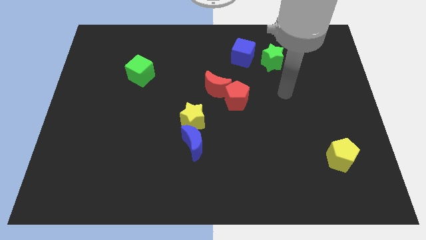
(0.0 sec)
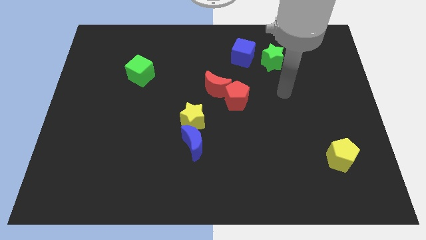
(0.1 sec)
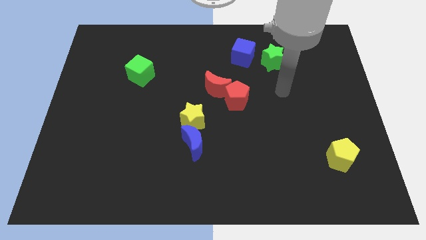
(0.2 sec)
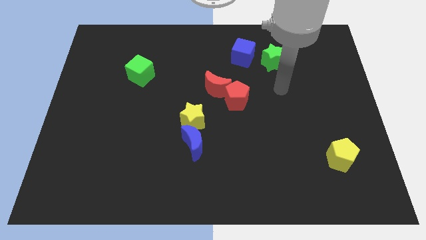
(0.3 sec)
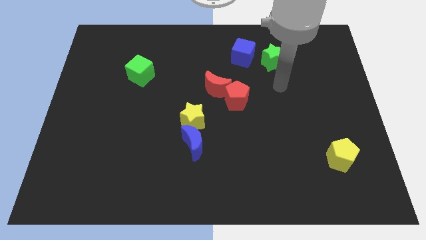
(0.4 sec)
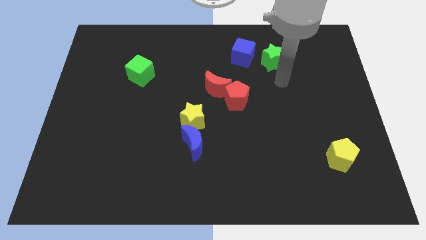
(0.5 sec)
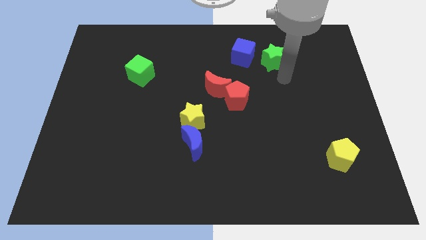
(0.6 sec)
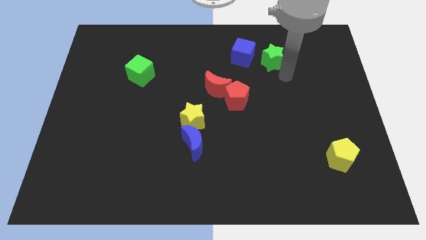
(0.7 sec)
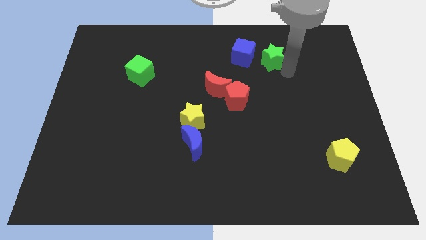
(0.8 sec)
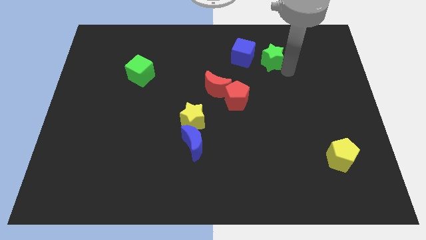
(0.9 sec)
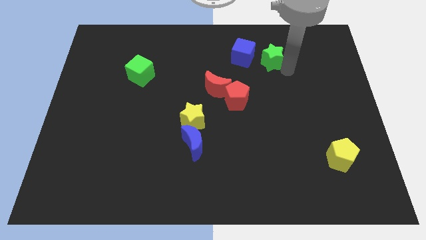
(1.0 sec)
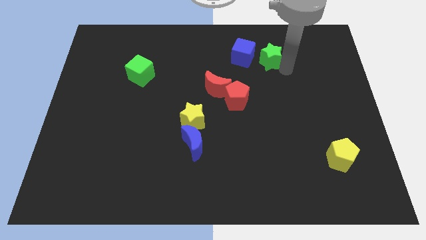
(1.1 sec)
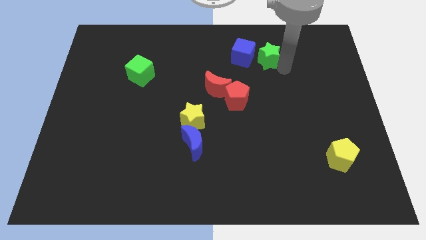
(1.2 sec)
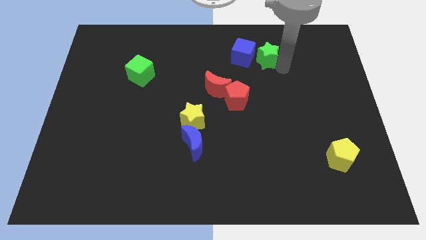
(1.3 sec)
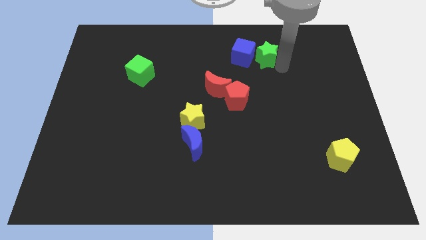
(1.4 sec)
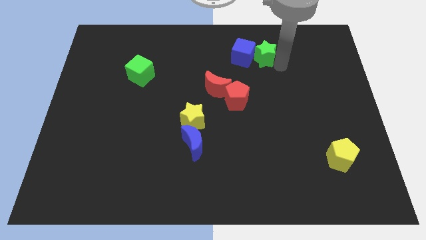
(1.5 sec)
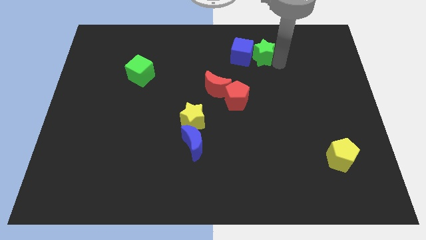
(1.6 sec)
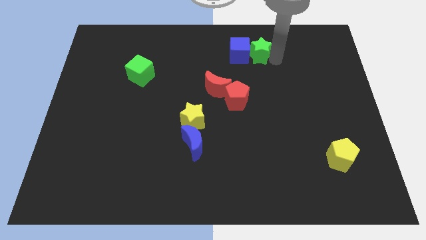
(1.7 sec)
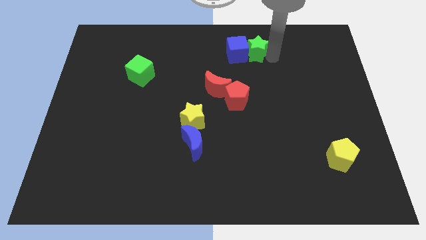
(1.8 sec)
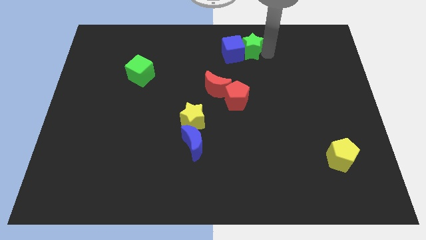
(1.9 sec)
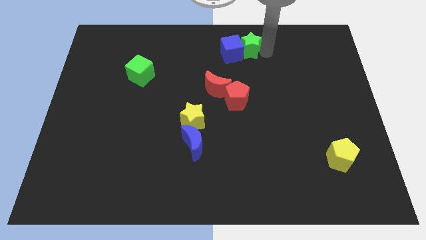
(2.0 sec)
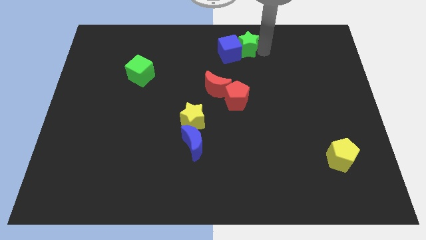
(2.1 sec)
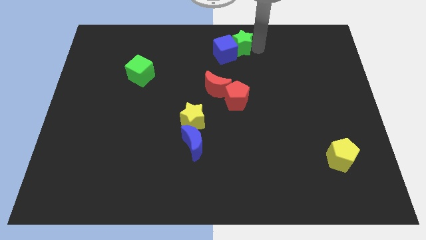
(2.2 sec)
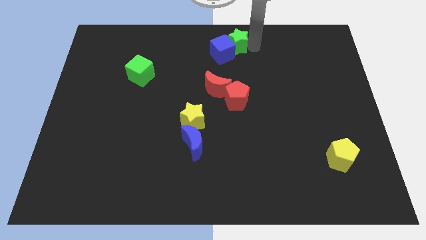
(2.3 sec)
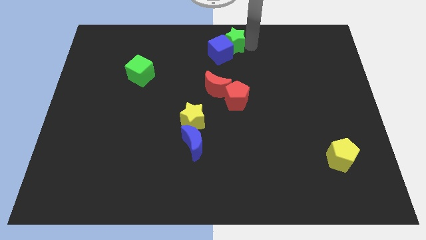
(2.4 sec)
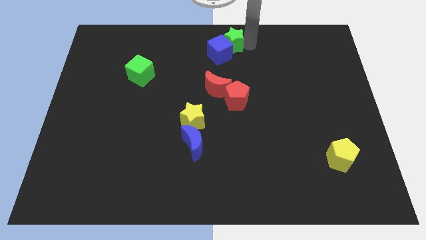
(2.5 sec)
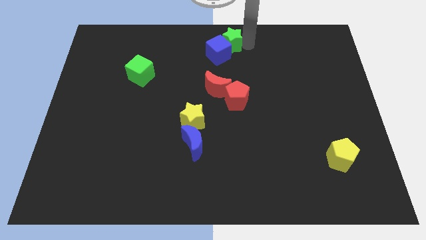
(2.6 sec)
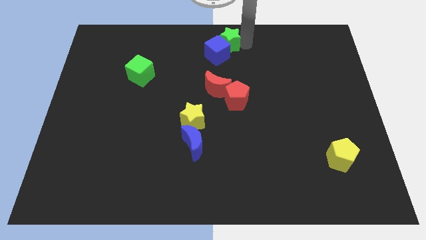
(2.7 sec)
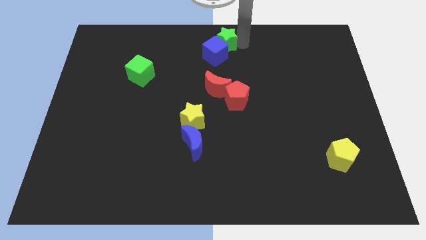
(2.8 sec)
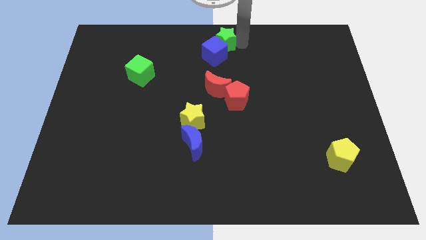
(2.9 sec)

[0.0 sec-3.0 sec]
move the green star to the top center side

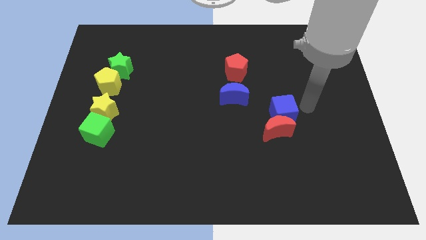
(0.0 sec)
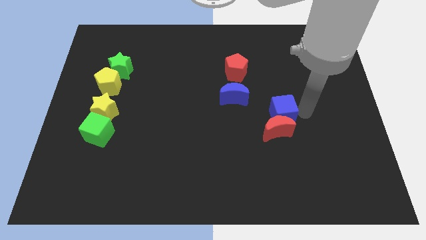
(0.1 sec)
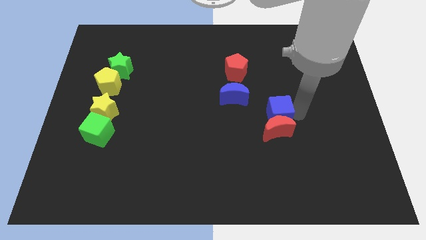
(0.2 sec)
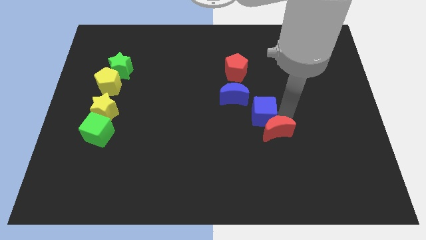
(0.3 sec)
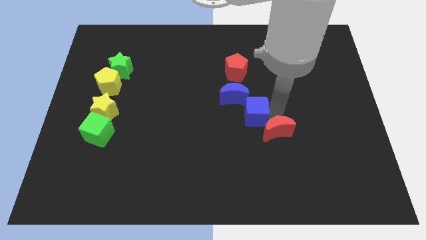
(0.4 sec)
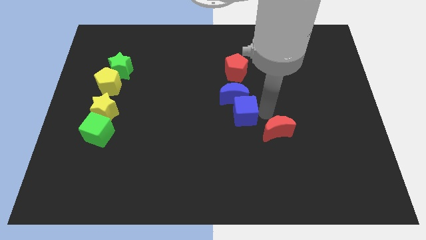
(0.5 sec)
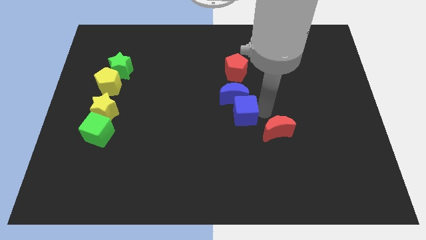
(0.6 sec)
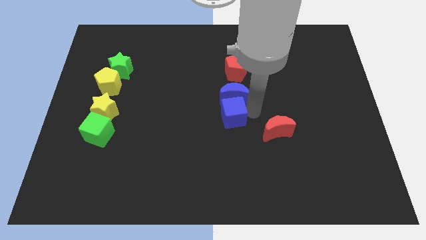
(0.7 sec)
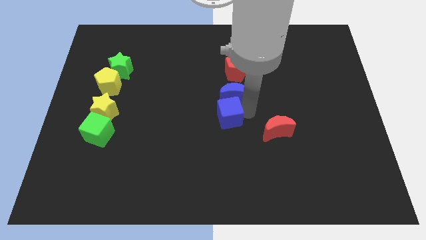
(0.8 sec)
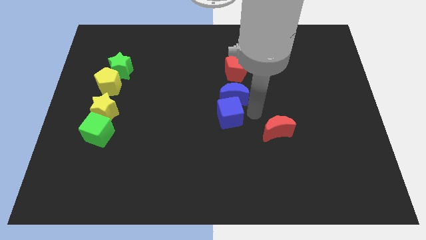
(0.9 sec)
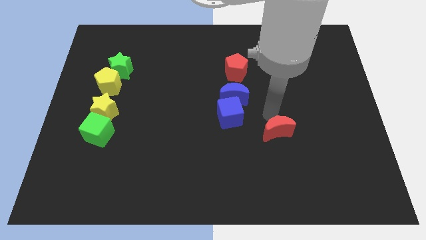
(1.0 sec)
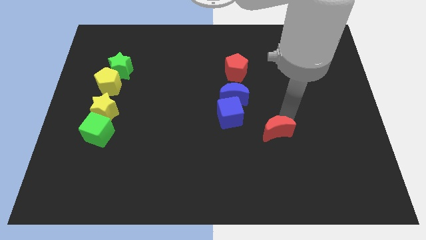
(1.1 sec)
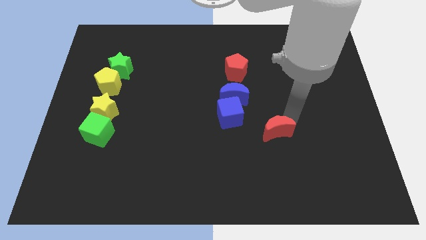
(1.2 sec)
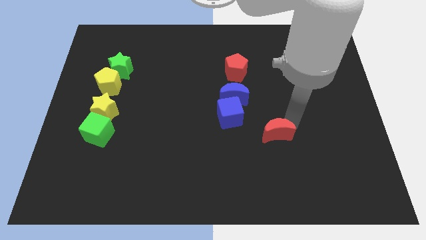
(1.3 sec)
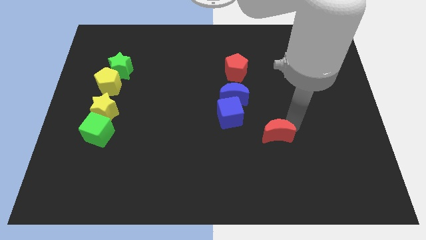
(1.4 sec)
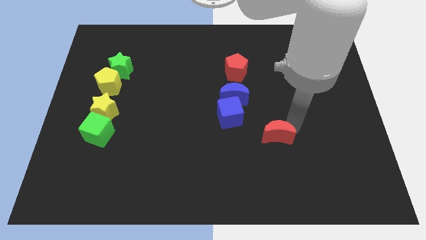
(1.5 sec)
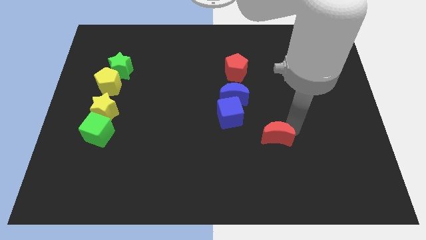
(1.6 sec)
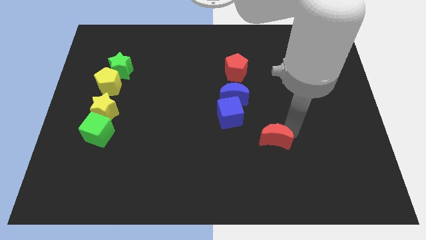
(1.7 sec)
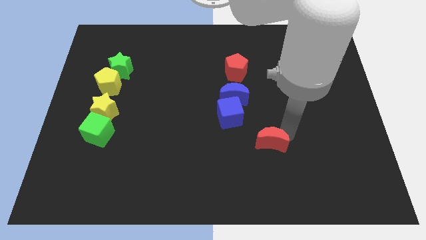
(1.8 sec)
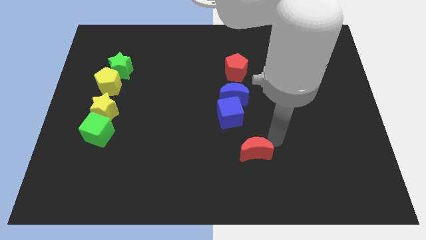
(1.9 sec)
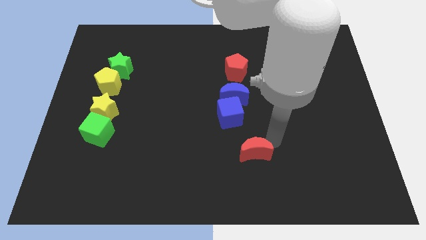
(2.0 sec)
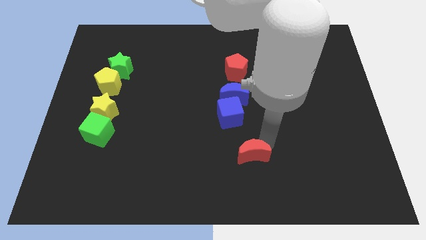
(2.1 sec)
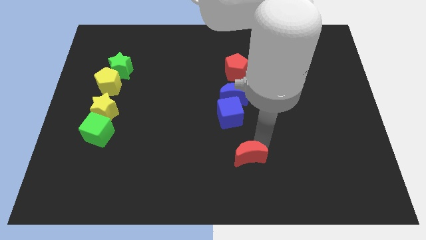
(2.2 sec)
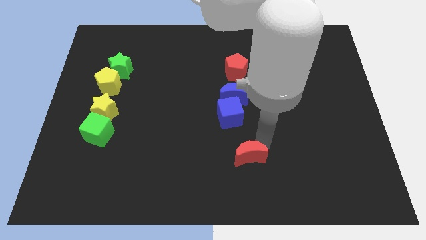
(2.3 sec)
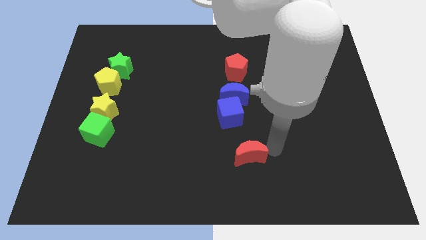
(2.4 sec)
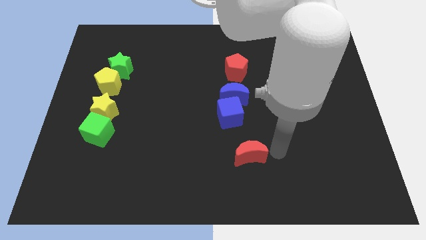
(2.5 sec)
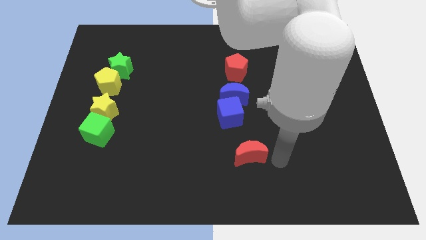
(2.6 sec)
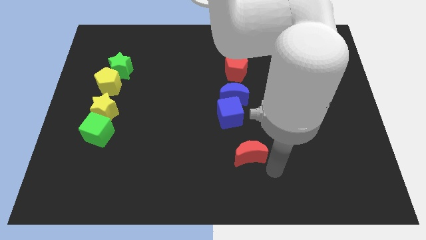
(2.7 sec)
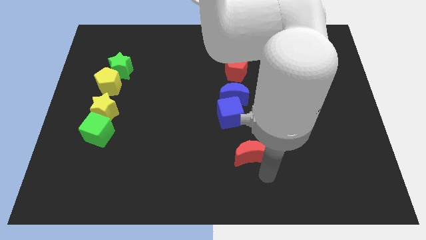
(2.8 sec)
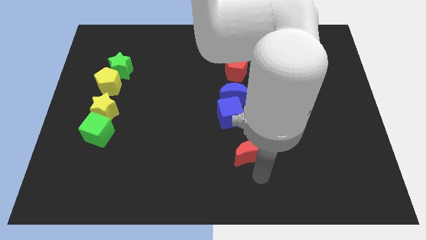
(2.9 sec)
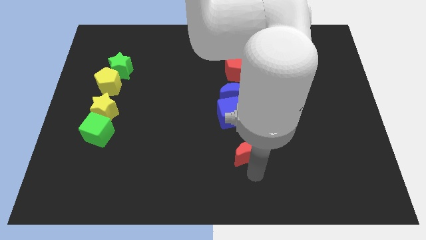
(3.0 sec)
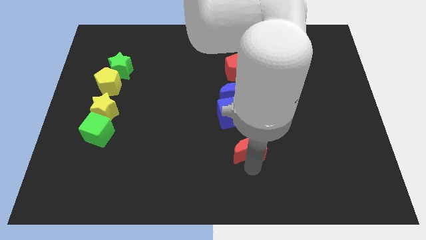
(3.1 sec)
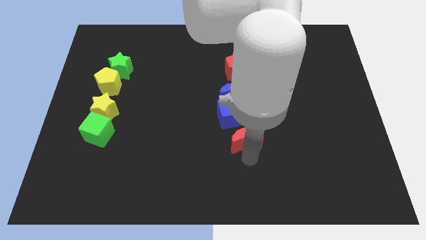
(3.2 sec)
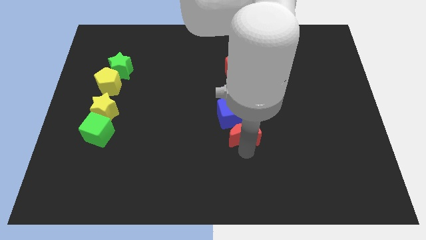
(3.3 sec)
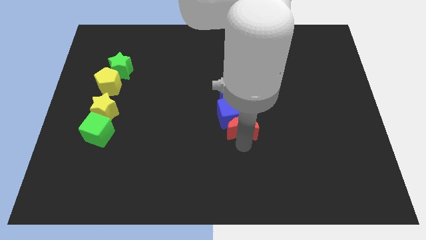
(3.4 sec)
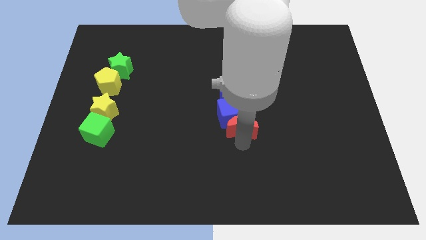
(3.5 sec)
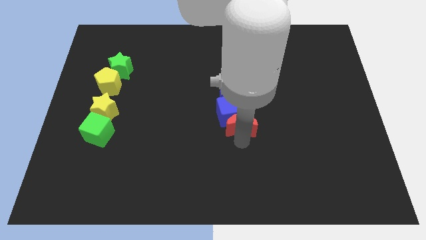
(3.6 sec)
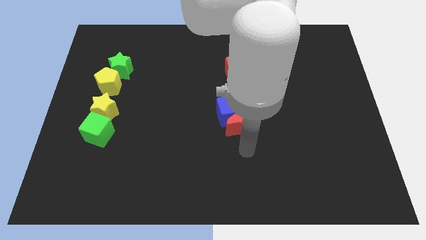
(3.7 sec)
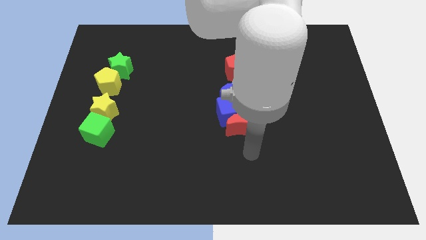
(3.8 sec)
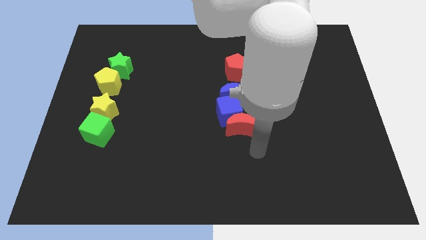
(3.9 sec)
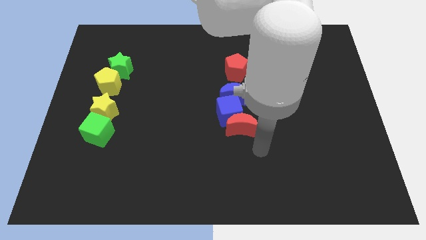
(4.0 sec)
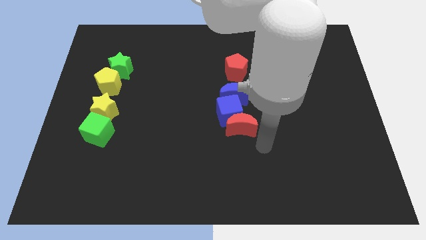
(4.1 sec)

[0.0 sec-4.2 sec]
place the blue cube red moon into the blue moon to form vertical line

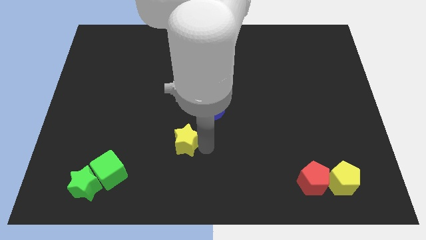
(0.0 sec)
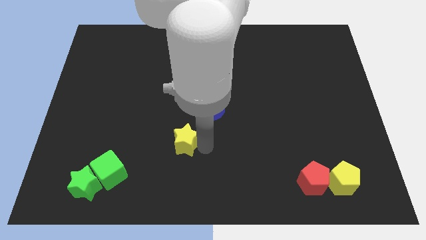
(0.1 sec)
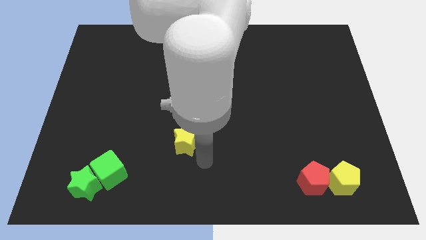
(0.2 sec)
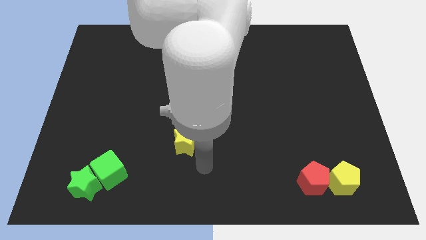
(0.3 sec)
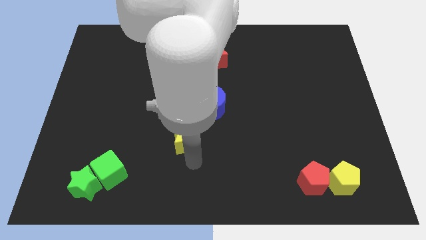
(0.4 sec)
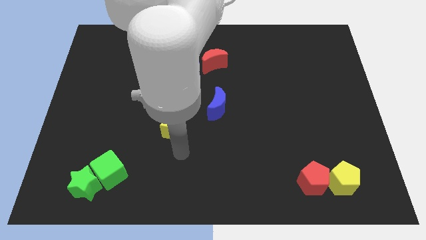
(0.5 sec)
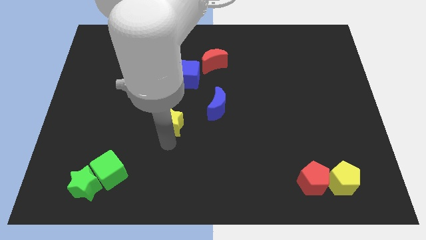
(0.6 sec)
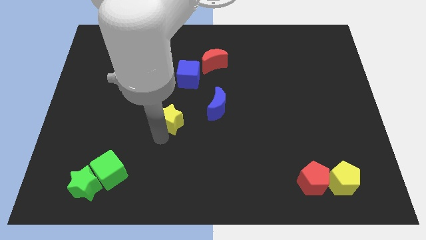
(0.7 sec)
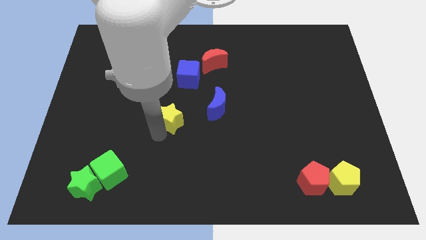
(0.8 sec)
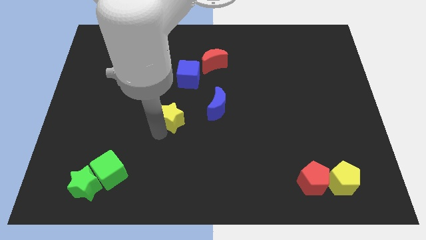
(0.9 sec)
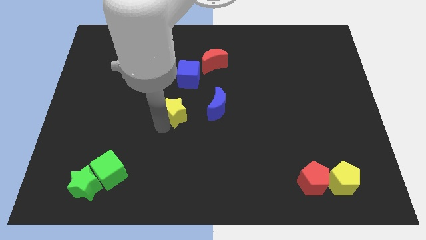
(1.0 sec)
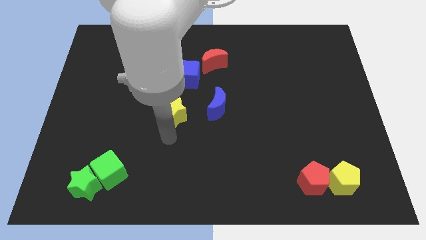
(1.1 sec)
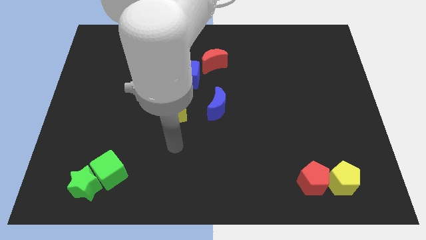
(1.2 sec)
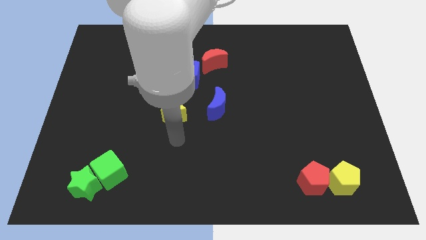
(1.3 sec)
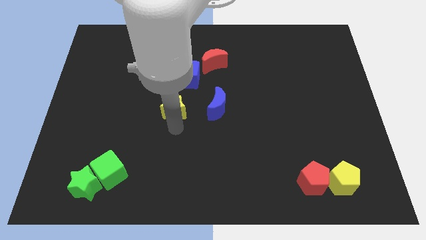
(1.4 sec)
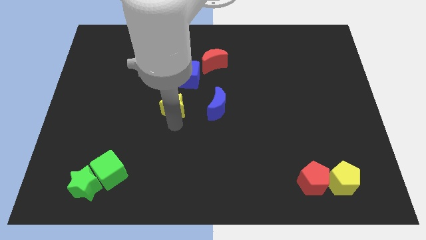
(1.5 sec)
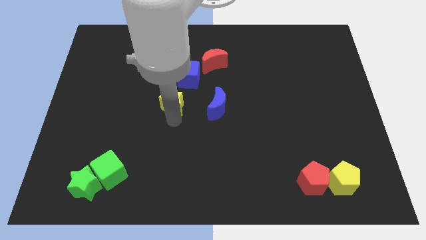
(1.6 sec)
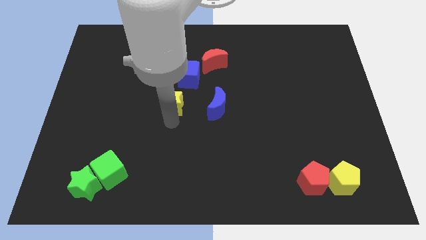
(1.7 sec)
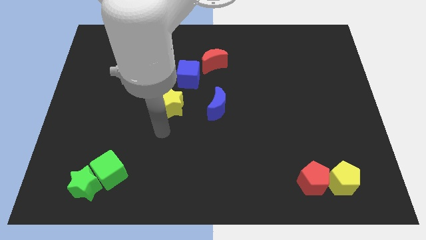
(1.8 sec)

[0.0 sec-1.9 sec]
move the yellow star close to the blue cube
